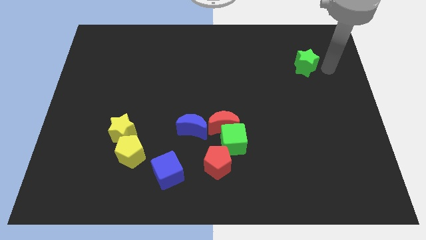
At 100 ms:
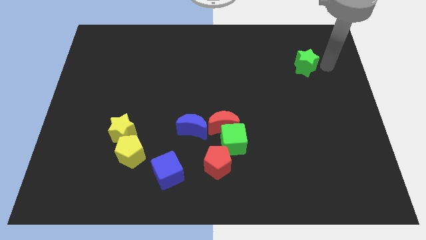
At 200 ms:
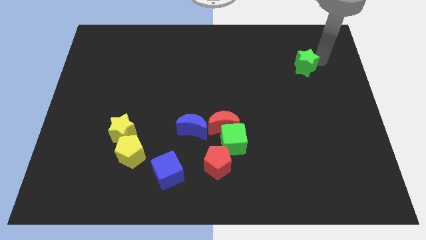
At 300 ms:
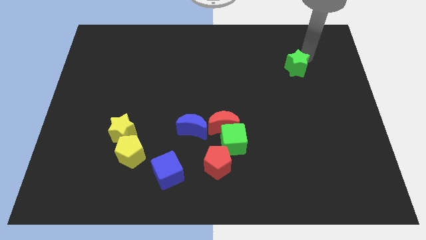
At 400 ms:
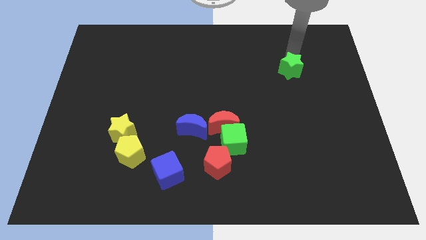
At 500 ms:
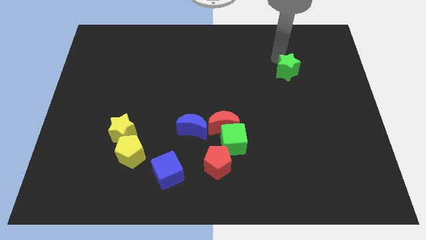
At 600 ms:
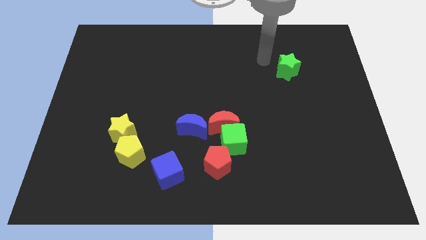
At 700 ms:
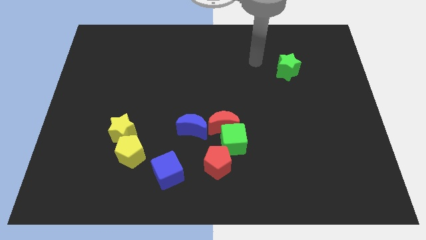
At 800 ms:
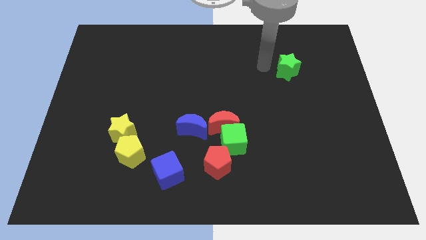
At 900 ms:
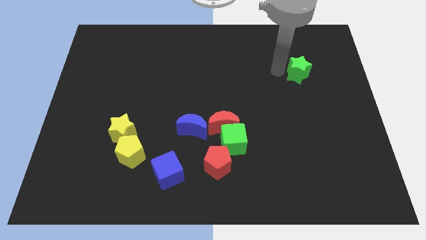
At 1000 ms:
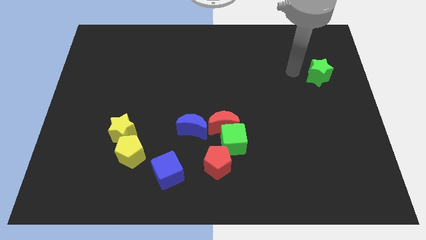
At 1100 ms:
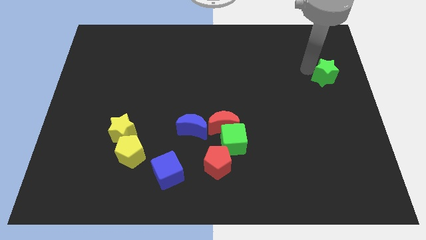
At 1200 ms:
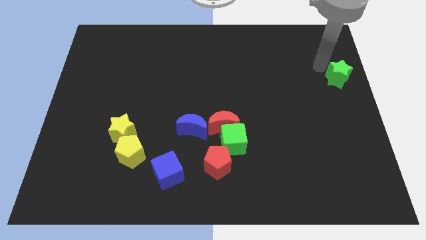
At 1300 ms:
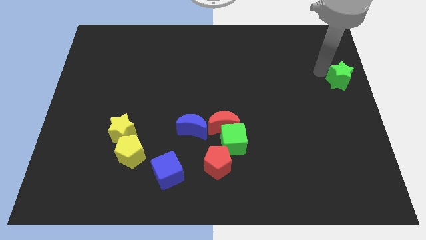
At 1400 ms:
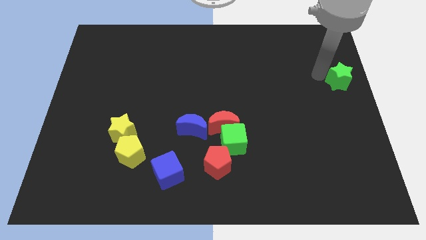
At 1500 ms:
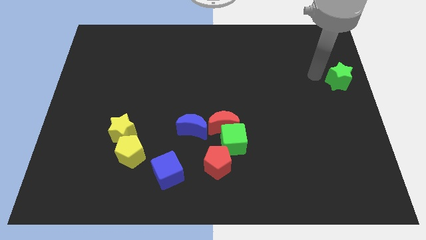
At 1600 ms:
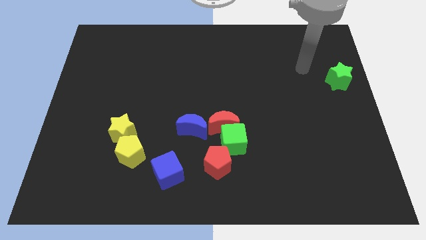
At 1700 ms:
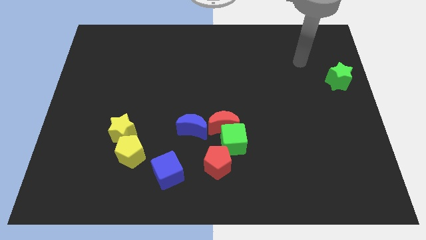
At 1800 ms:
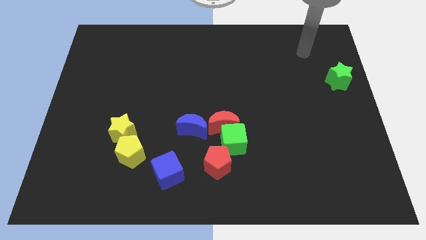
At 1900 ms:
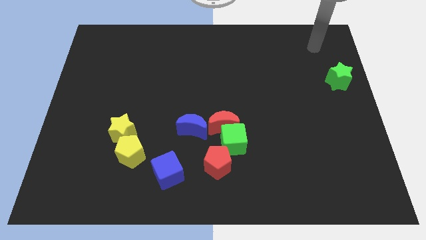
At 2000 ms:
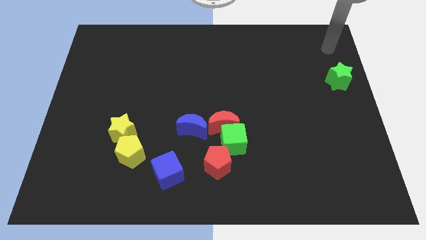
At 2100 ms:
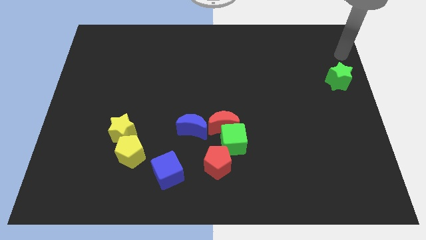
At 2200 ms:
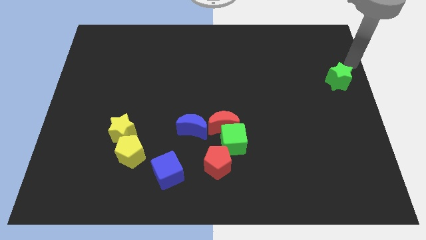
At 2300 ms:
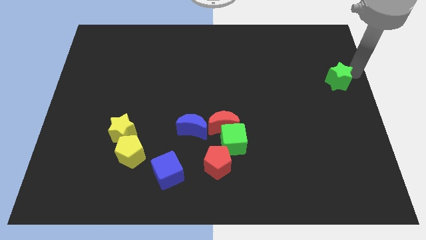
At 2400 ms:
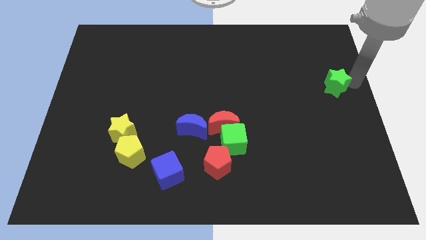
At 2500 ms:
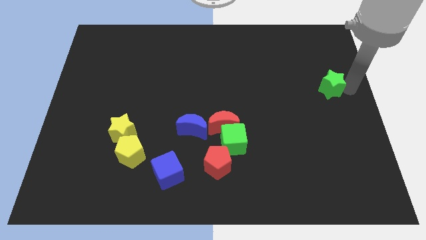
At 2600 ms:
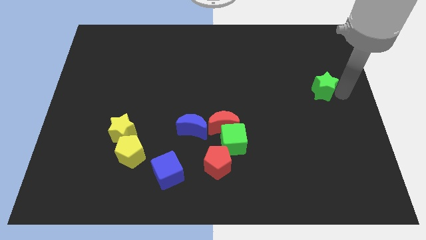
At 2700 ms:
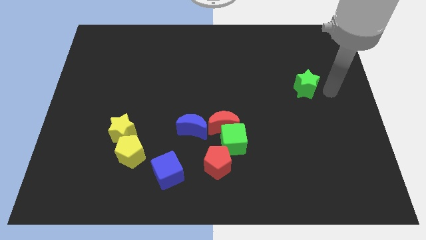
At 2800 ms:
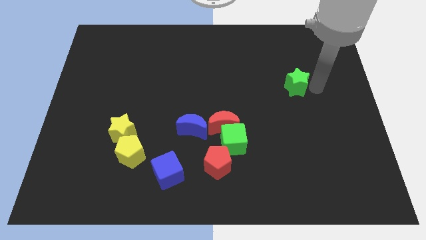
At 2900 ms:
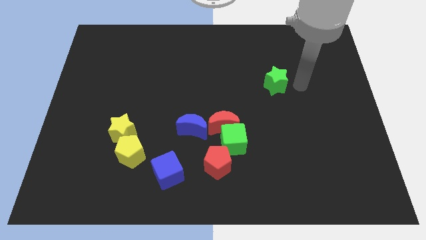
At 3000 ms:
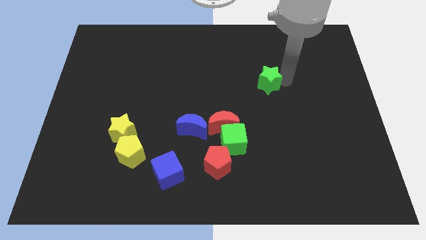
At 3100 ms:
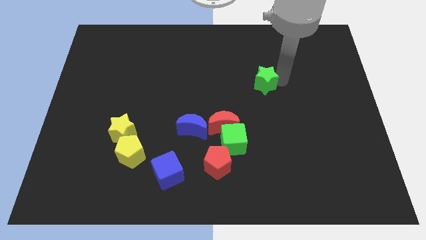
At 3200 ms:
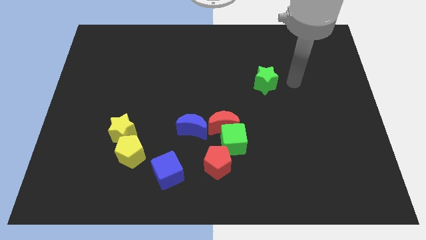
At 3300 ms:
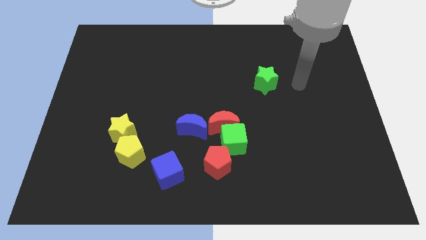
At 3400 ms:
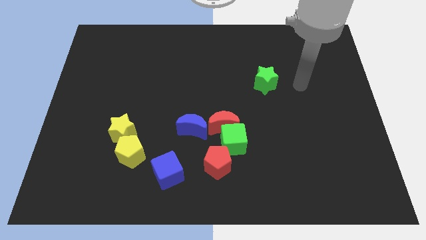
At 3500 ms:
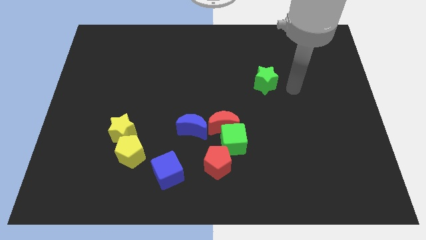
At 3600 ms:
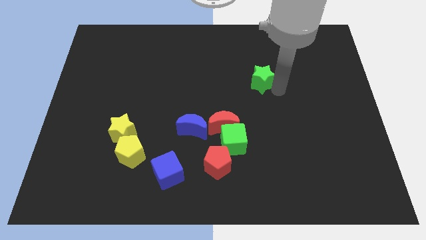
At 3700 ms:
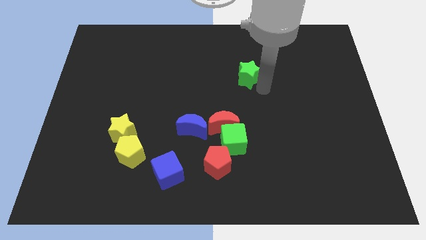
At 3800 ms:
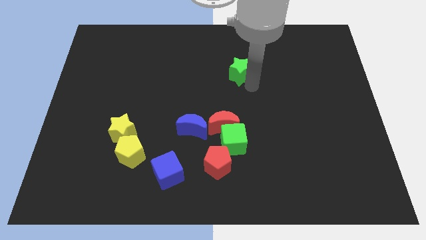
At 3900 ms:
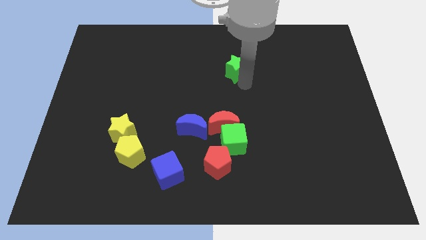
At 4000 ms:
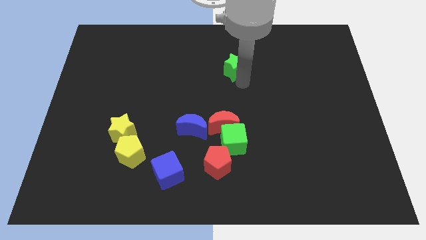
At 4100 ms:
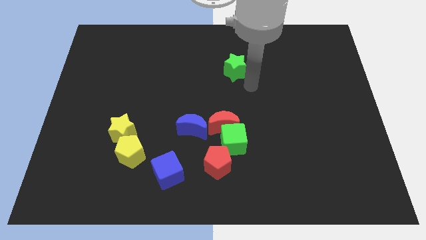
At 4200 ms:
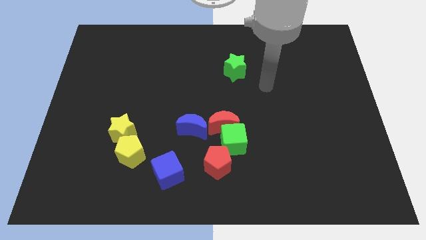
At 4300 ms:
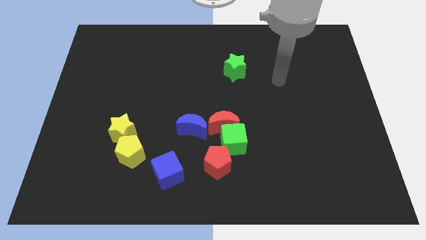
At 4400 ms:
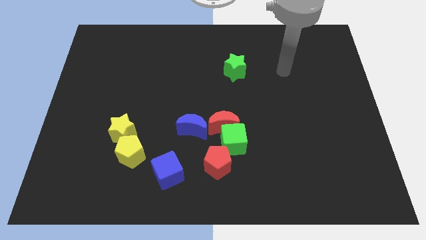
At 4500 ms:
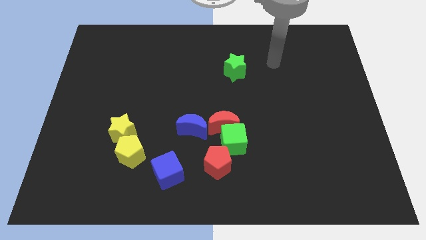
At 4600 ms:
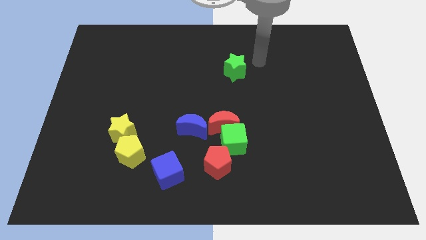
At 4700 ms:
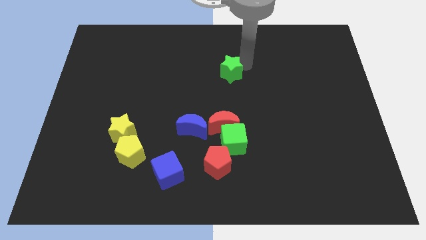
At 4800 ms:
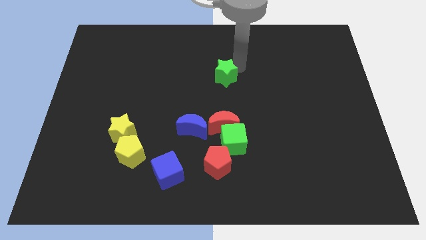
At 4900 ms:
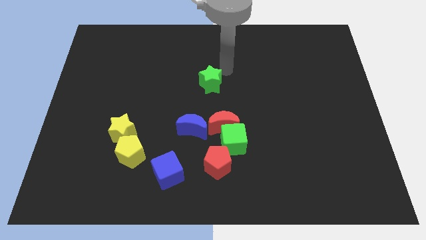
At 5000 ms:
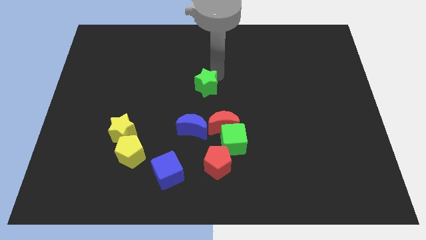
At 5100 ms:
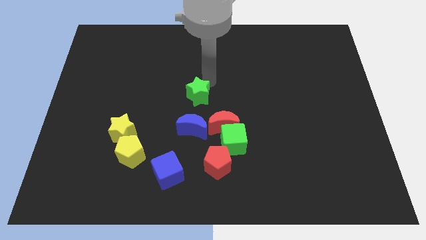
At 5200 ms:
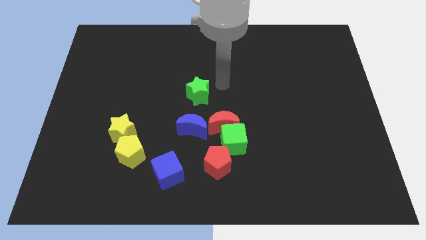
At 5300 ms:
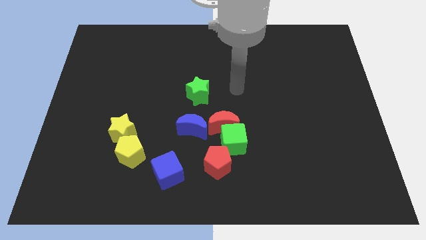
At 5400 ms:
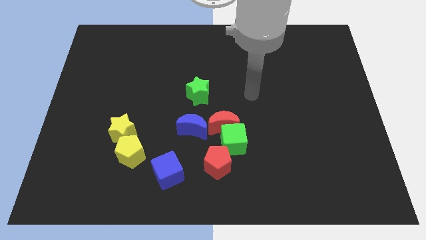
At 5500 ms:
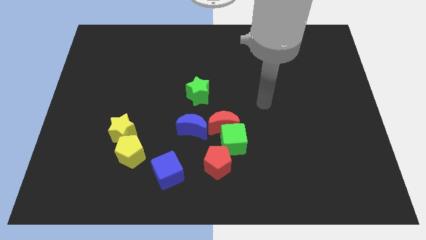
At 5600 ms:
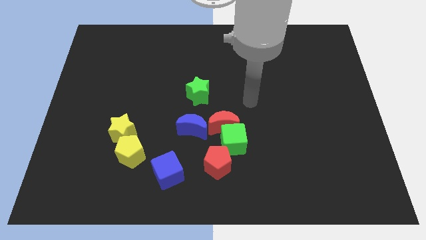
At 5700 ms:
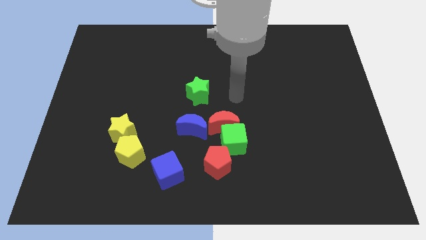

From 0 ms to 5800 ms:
place the green star vertically above the blue moon

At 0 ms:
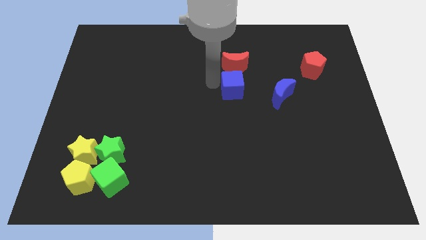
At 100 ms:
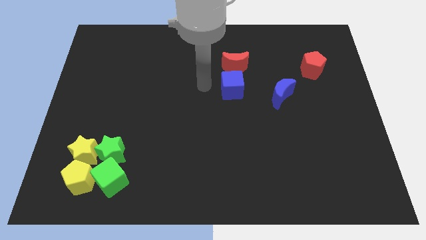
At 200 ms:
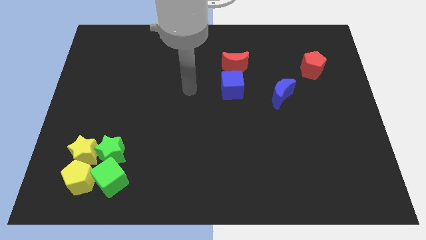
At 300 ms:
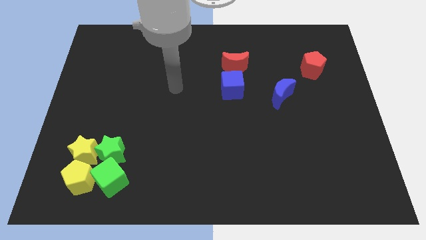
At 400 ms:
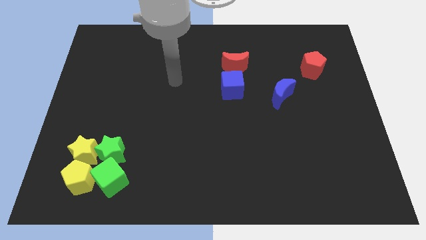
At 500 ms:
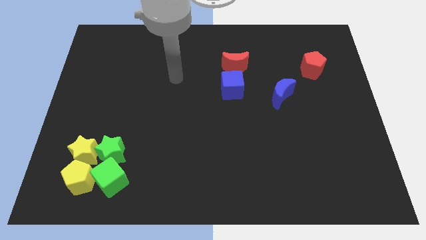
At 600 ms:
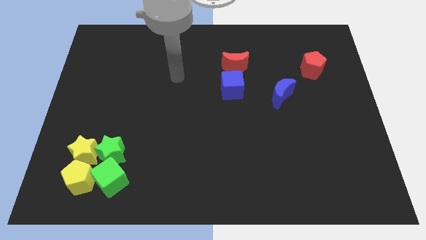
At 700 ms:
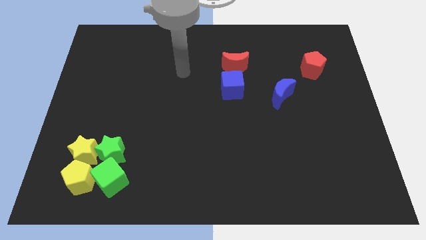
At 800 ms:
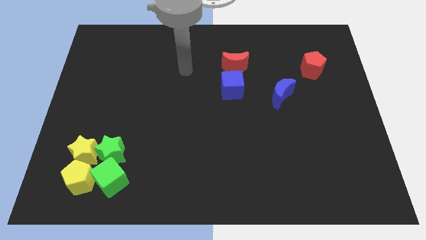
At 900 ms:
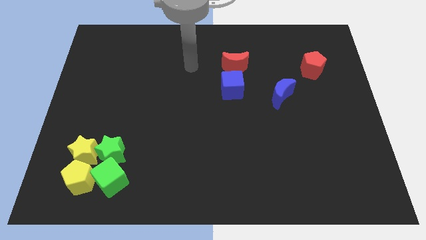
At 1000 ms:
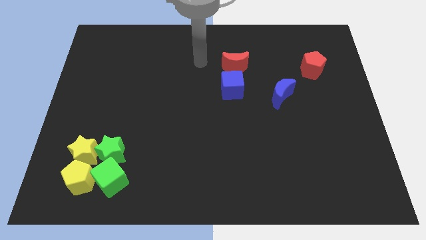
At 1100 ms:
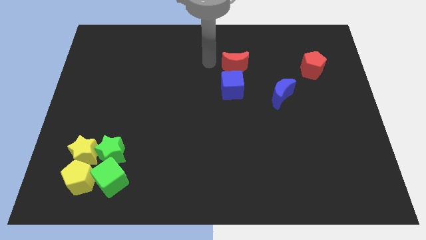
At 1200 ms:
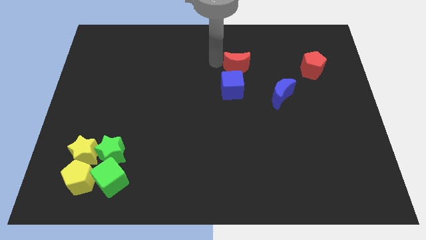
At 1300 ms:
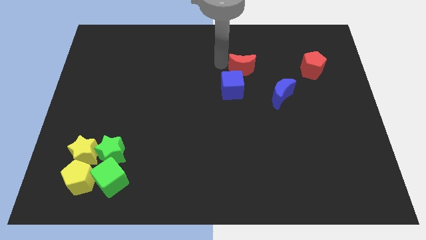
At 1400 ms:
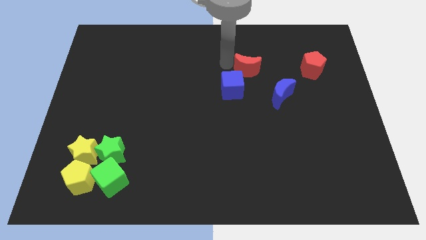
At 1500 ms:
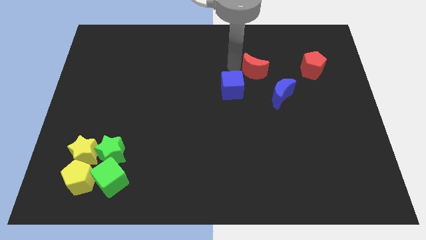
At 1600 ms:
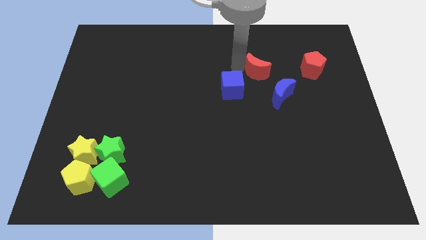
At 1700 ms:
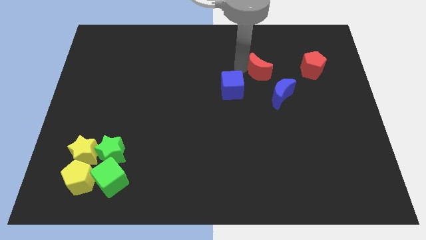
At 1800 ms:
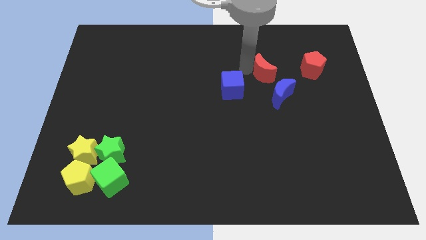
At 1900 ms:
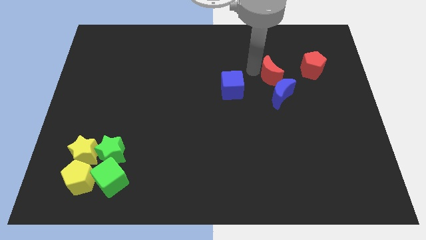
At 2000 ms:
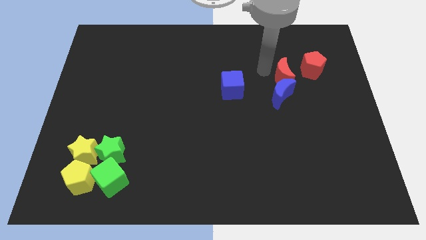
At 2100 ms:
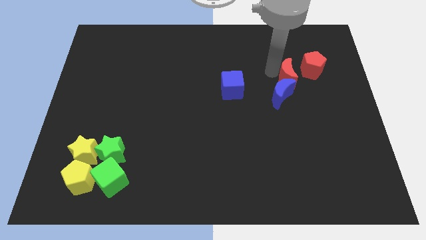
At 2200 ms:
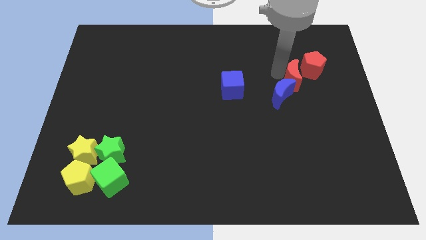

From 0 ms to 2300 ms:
move the red crescent in between to the blue crescent and red pentagon

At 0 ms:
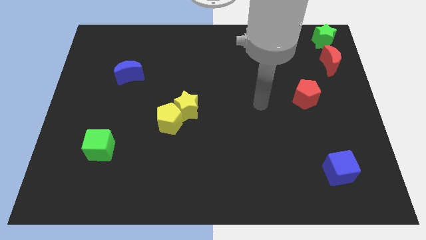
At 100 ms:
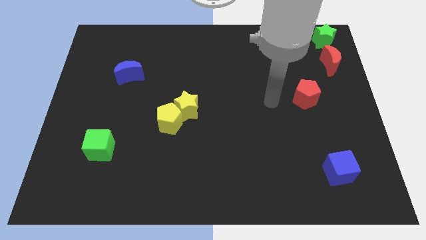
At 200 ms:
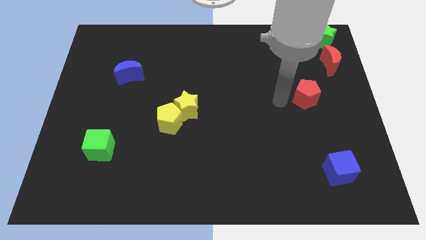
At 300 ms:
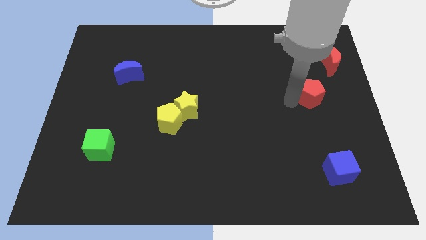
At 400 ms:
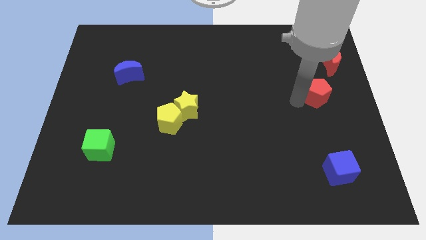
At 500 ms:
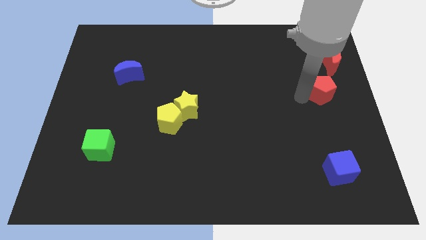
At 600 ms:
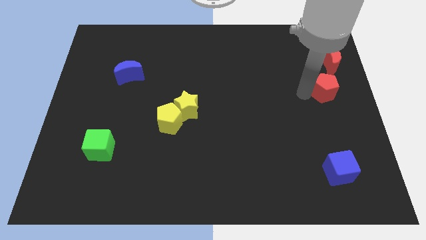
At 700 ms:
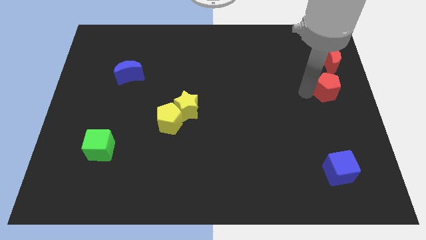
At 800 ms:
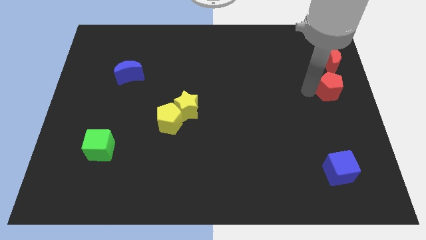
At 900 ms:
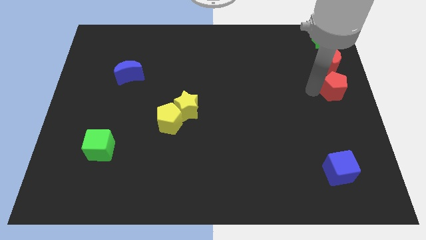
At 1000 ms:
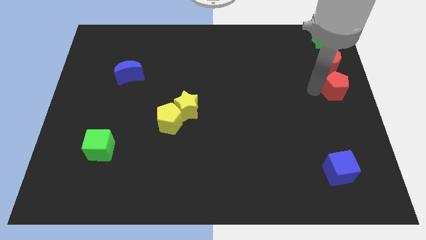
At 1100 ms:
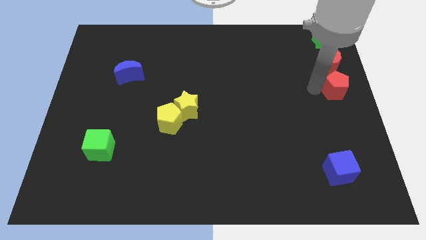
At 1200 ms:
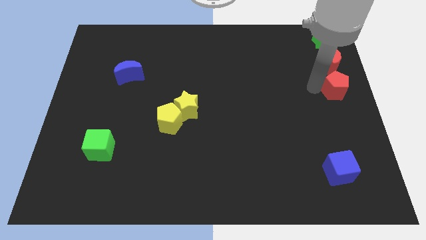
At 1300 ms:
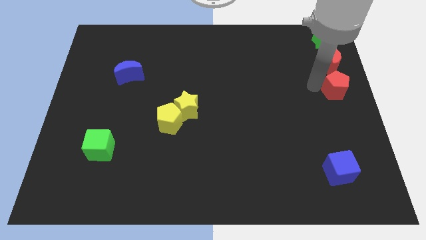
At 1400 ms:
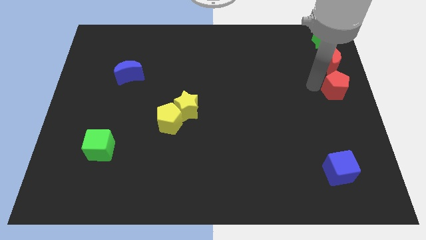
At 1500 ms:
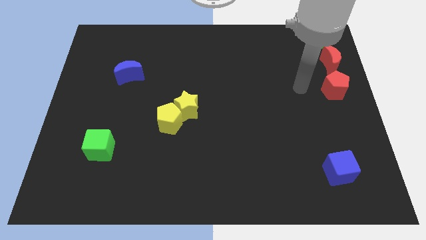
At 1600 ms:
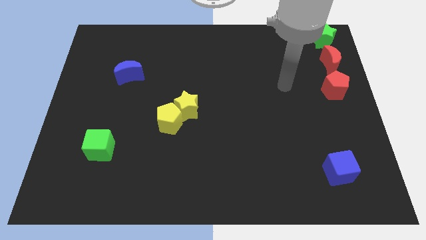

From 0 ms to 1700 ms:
place the red pentagon under the red crescent
